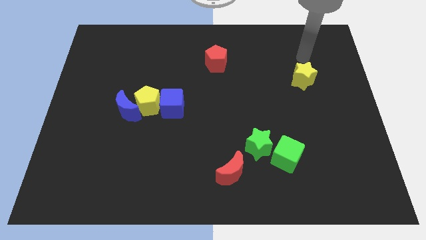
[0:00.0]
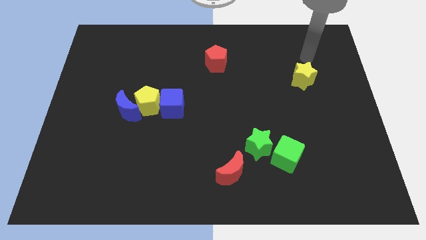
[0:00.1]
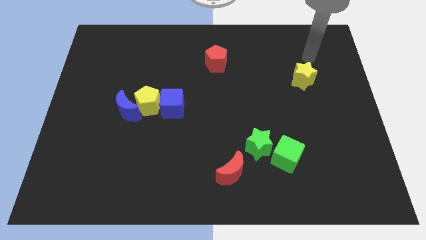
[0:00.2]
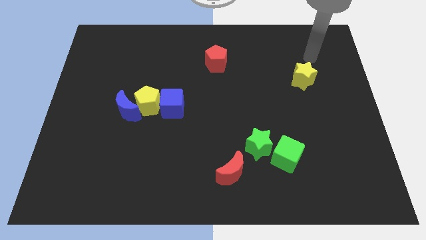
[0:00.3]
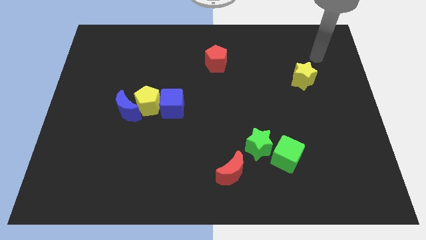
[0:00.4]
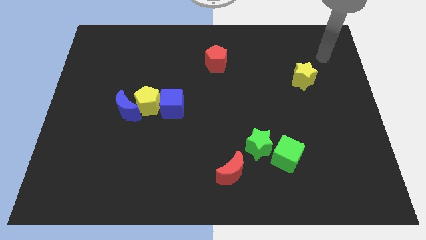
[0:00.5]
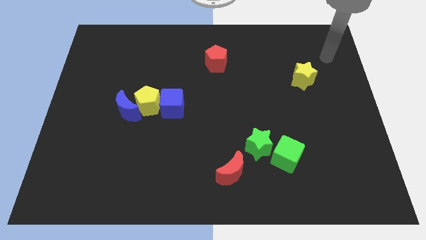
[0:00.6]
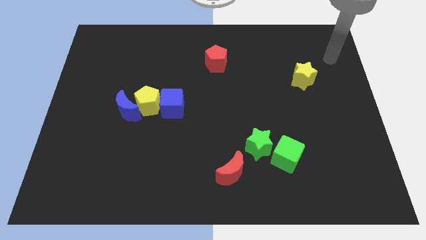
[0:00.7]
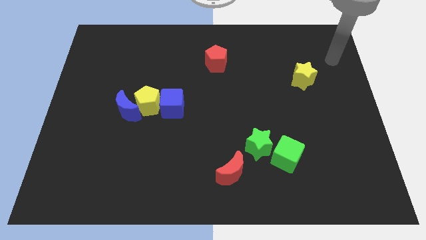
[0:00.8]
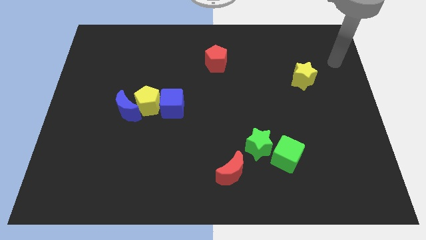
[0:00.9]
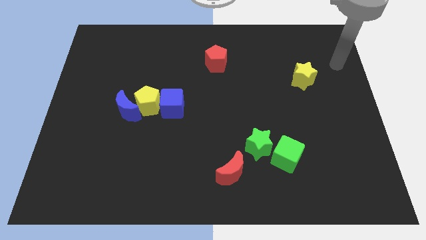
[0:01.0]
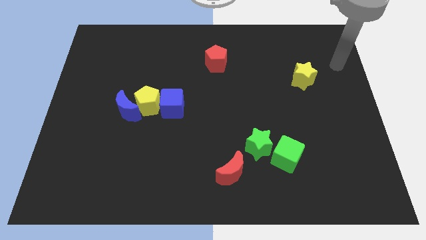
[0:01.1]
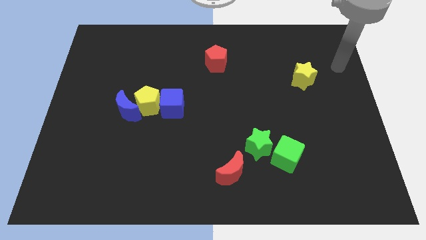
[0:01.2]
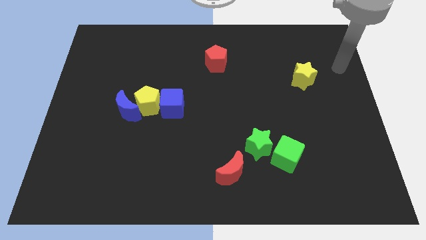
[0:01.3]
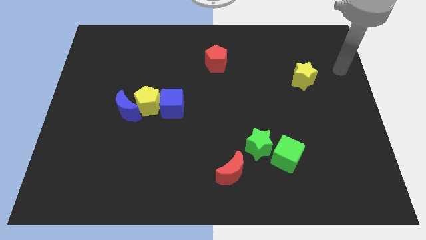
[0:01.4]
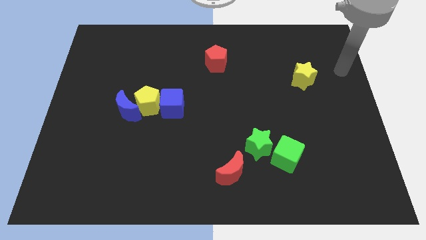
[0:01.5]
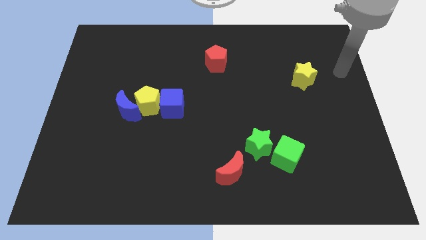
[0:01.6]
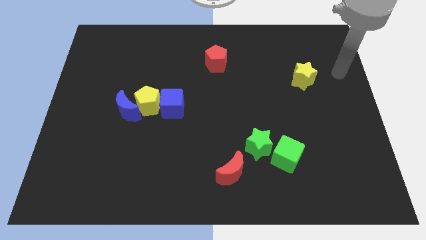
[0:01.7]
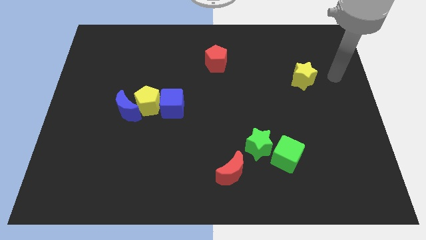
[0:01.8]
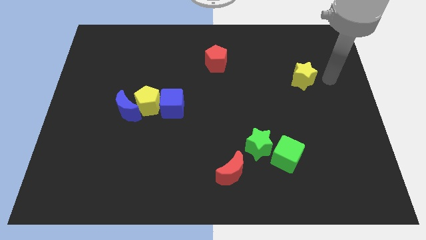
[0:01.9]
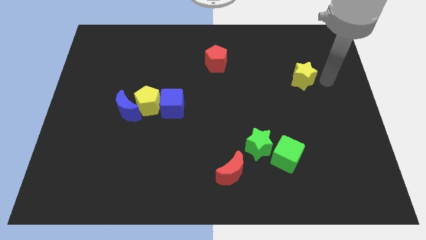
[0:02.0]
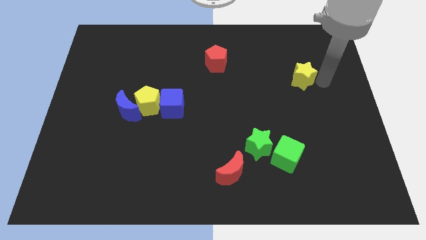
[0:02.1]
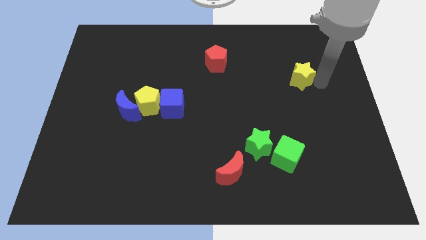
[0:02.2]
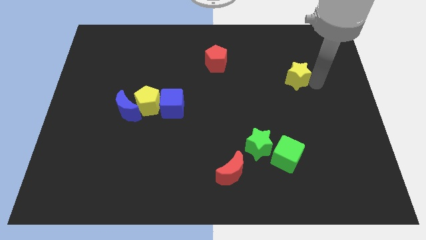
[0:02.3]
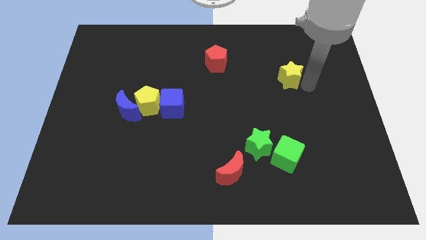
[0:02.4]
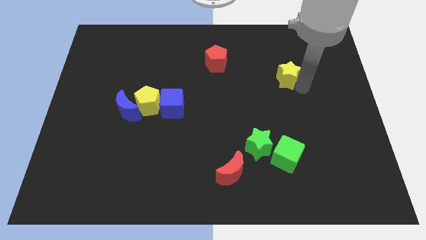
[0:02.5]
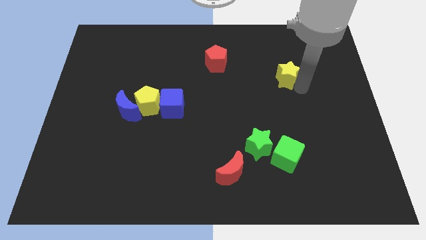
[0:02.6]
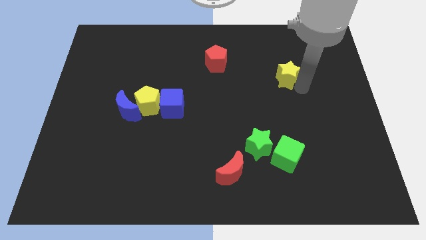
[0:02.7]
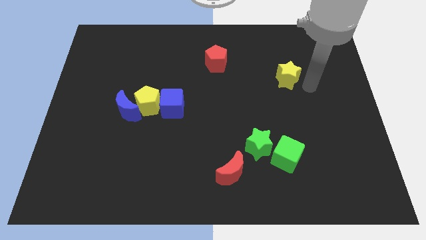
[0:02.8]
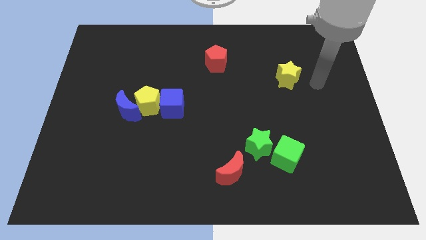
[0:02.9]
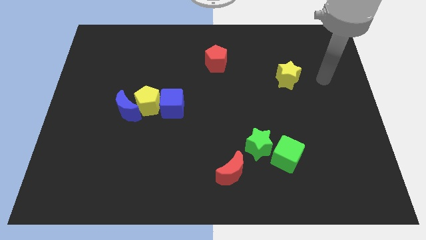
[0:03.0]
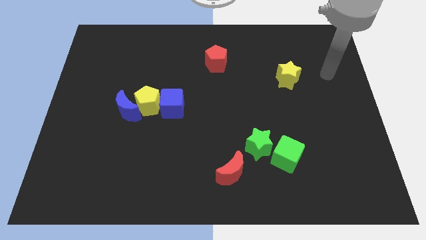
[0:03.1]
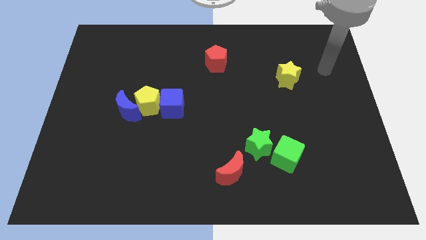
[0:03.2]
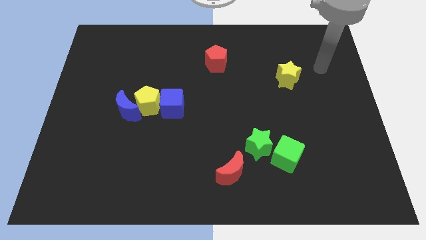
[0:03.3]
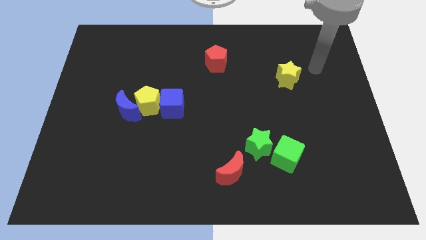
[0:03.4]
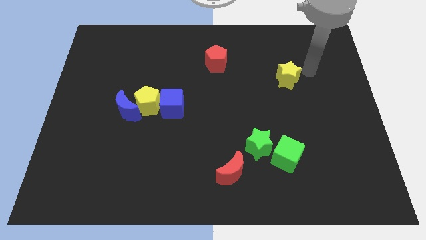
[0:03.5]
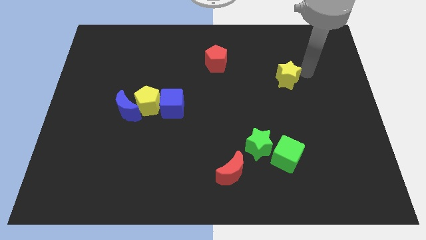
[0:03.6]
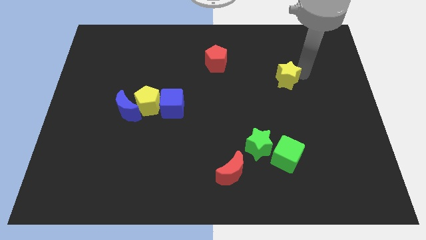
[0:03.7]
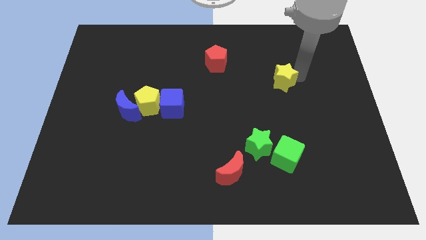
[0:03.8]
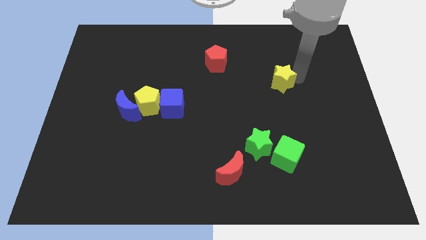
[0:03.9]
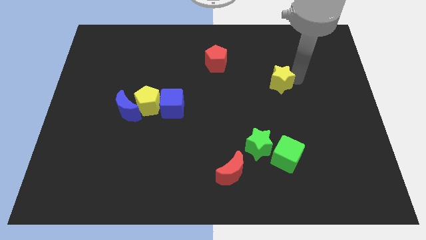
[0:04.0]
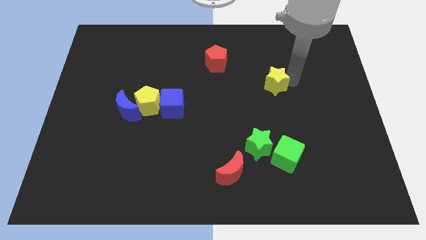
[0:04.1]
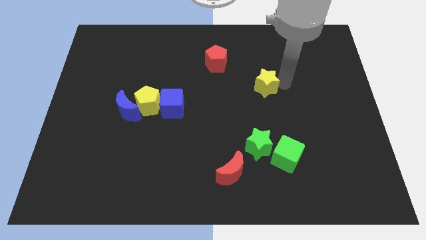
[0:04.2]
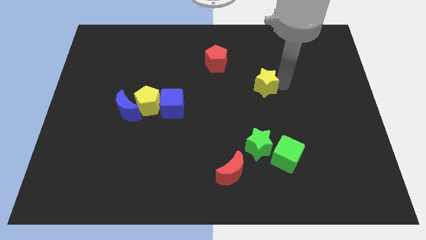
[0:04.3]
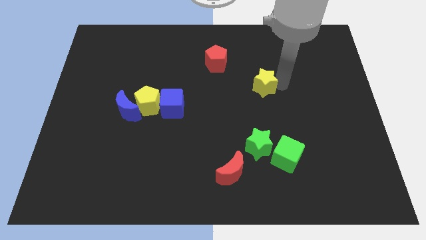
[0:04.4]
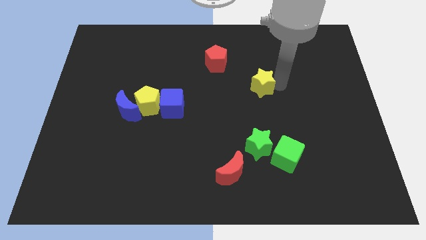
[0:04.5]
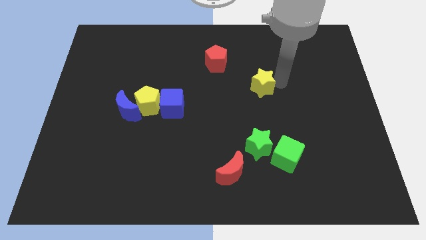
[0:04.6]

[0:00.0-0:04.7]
push the yellow star towards the center of the board

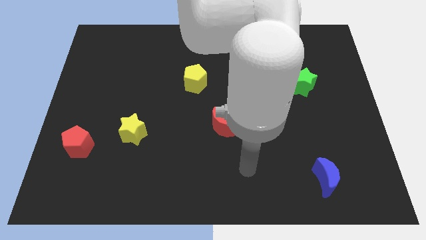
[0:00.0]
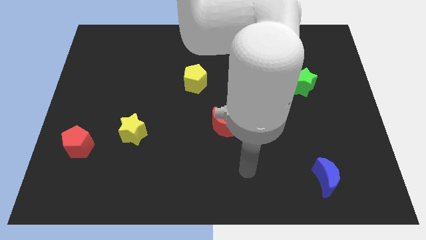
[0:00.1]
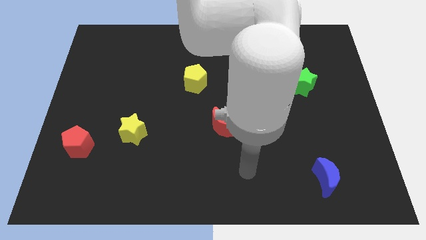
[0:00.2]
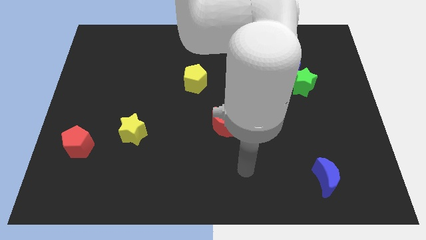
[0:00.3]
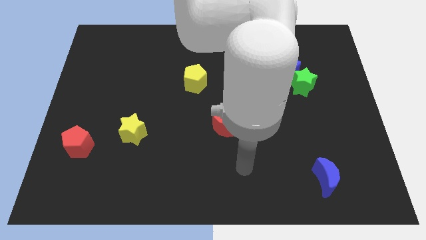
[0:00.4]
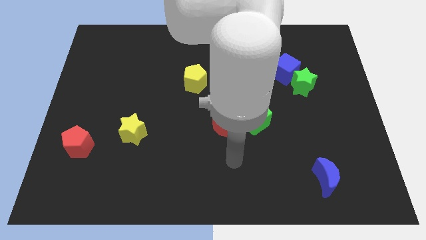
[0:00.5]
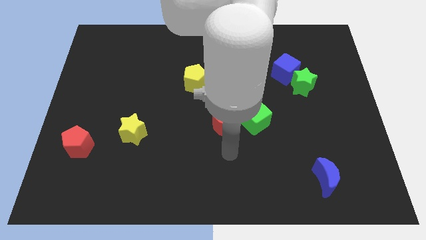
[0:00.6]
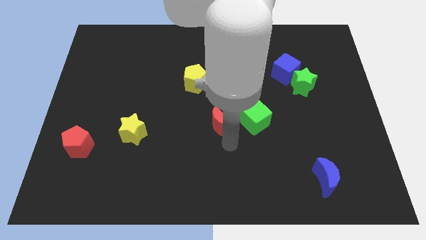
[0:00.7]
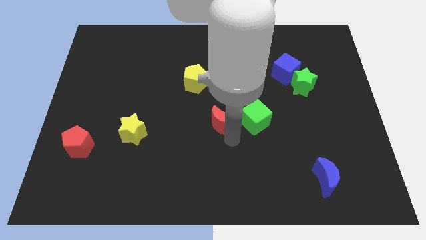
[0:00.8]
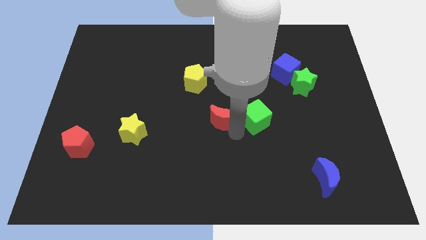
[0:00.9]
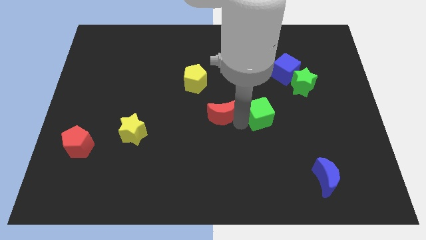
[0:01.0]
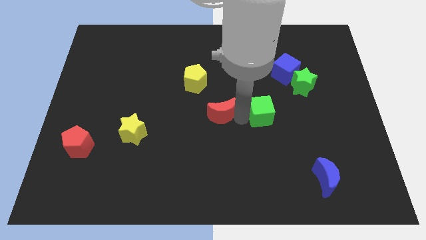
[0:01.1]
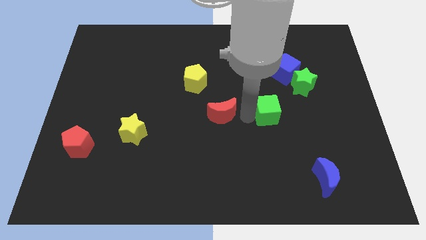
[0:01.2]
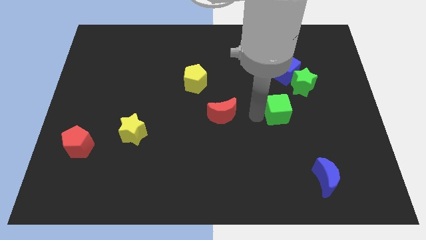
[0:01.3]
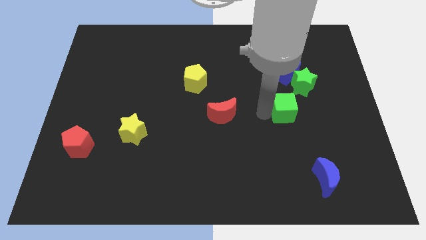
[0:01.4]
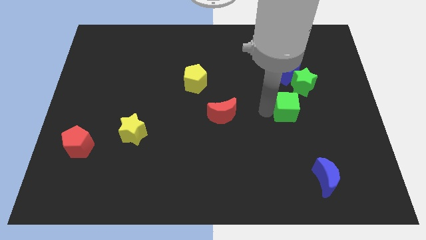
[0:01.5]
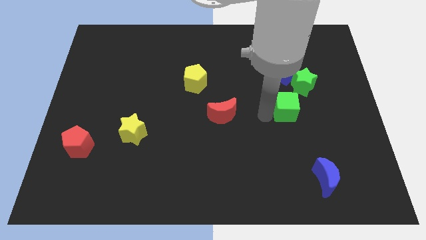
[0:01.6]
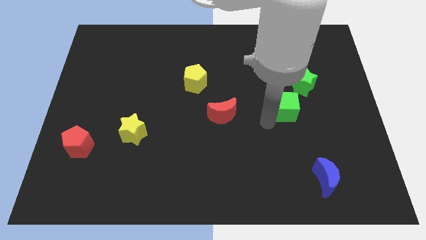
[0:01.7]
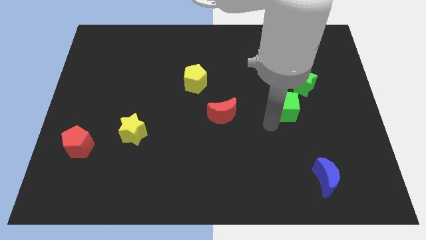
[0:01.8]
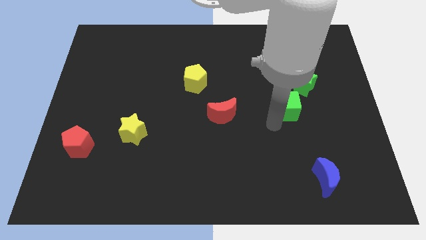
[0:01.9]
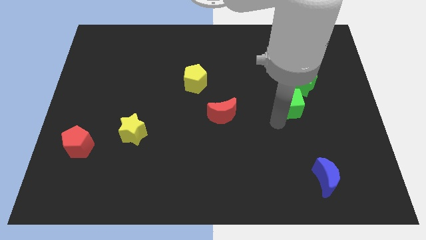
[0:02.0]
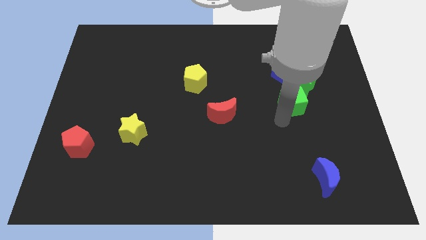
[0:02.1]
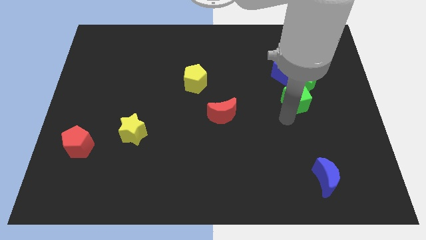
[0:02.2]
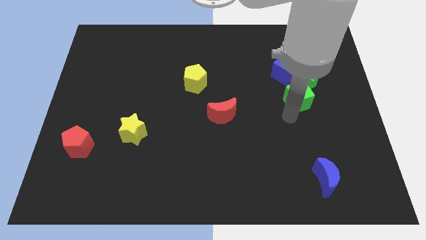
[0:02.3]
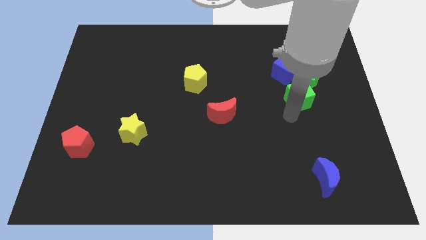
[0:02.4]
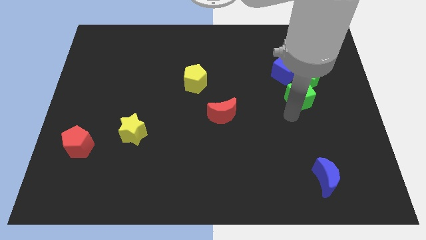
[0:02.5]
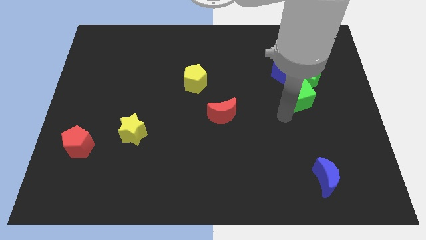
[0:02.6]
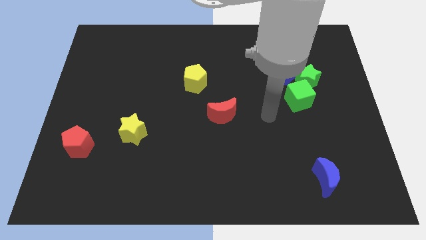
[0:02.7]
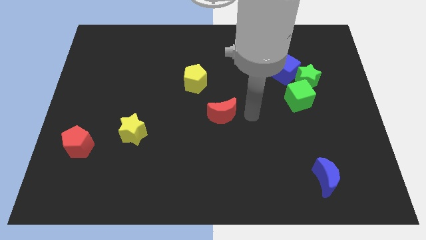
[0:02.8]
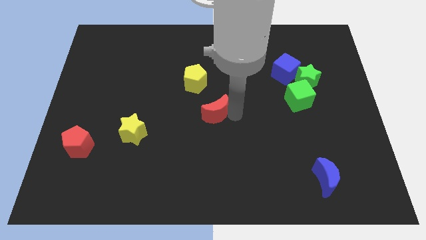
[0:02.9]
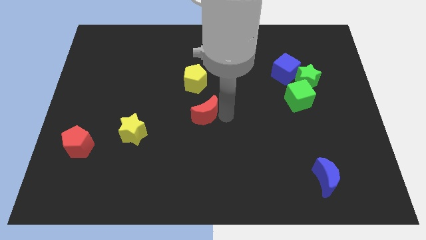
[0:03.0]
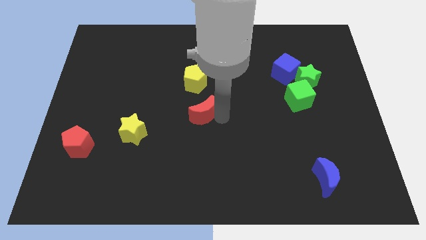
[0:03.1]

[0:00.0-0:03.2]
move the green cube below the green star

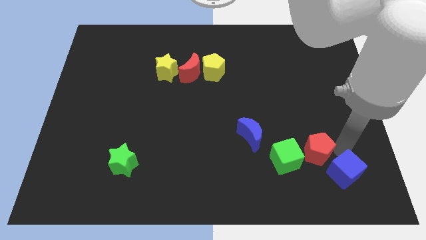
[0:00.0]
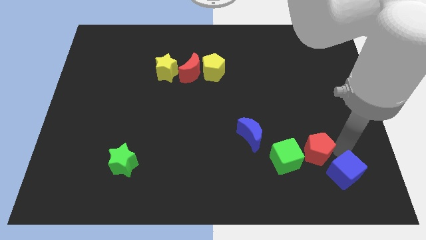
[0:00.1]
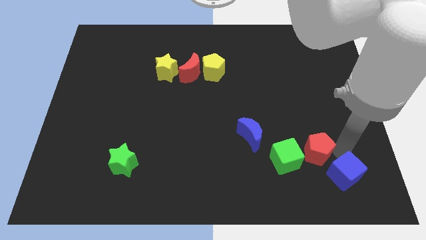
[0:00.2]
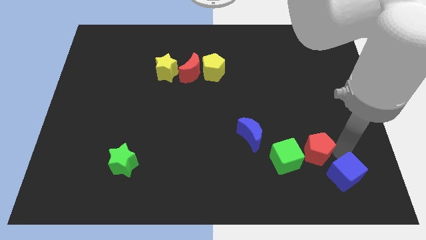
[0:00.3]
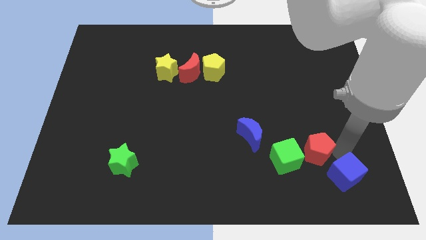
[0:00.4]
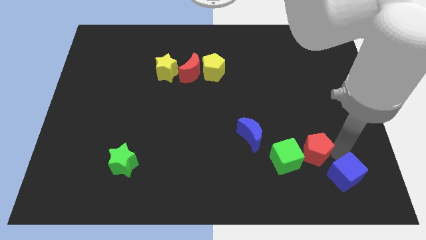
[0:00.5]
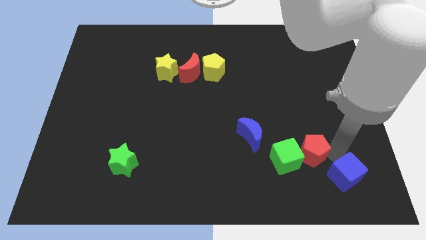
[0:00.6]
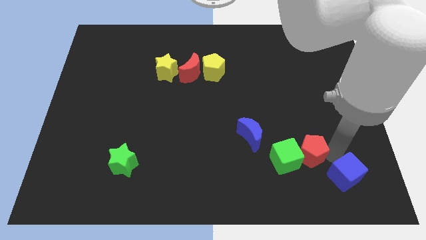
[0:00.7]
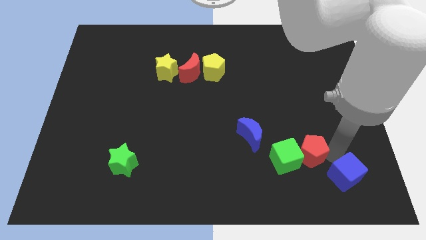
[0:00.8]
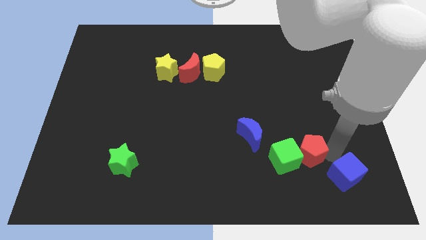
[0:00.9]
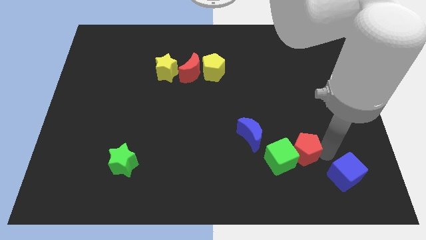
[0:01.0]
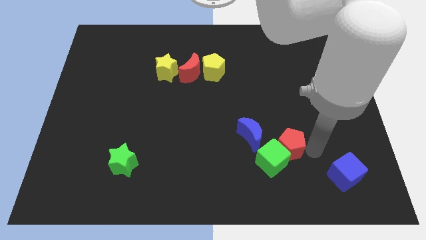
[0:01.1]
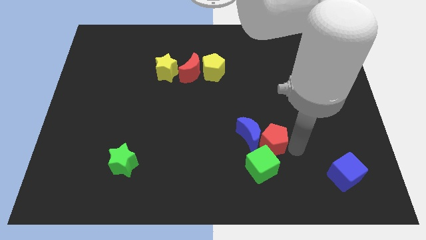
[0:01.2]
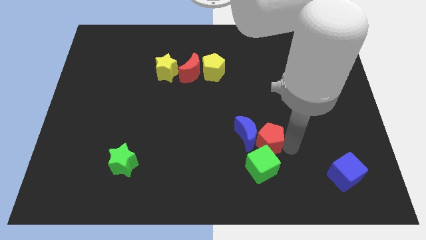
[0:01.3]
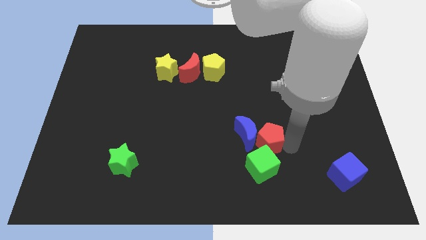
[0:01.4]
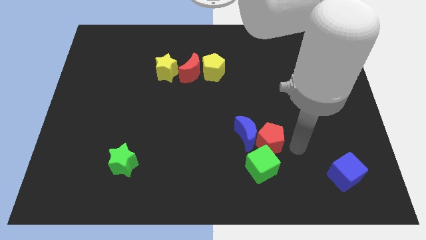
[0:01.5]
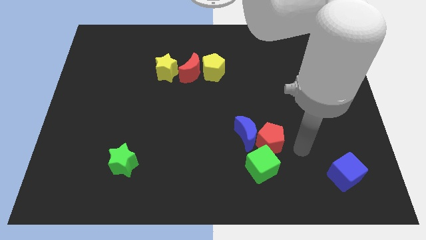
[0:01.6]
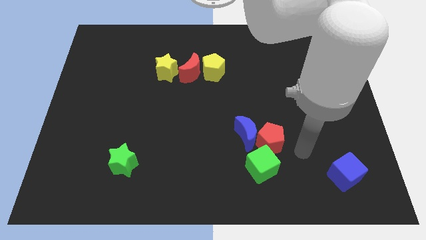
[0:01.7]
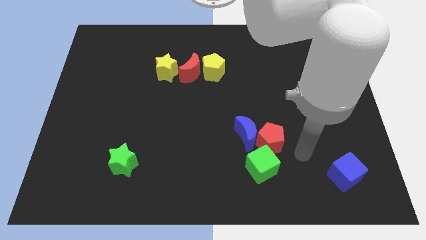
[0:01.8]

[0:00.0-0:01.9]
push a group of blocks to the center
